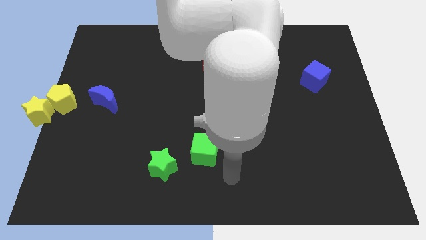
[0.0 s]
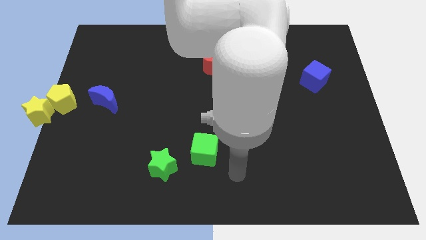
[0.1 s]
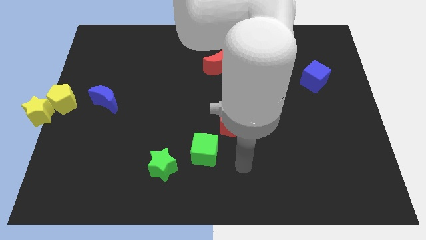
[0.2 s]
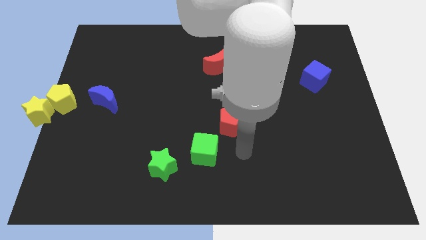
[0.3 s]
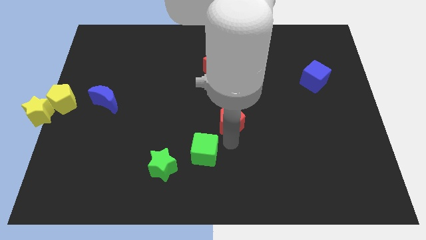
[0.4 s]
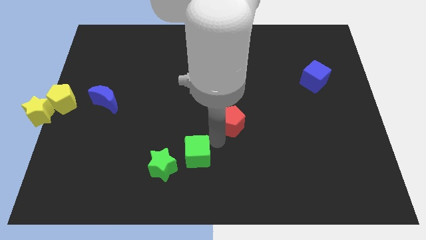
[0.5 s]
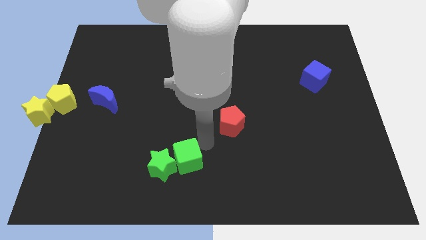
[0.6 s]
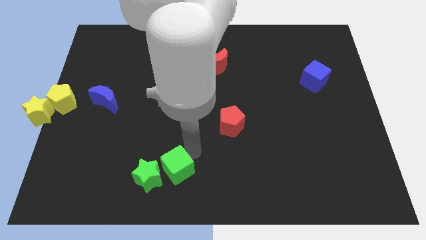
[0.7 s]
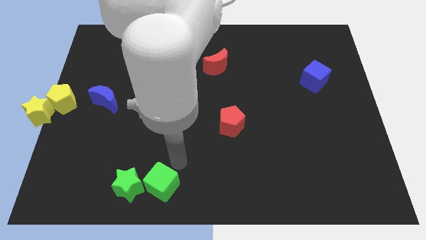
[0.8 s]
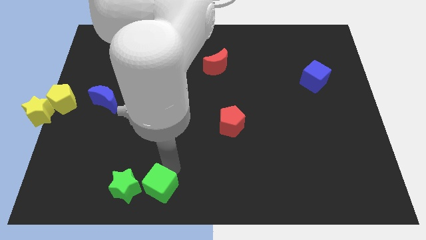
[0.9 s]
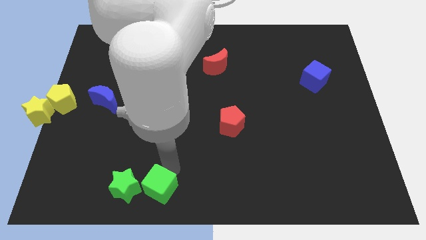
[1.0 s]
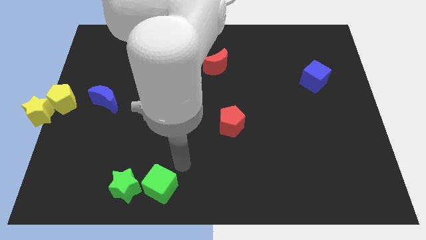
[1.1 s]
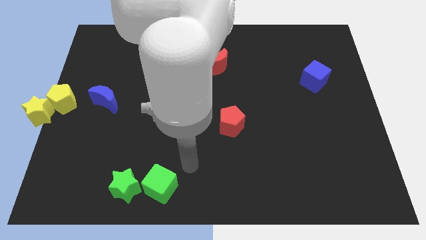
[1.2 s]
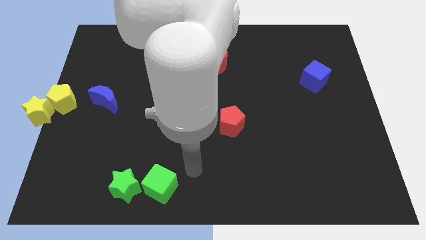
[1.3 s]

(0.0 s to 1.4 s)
push the green cube right to the green star

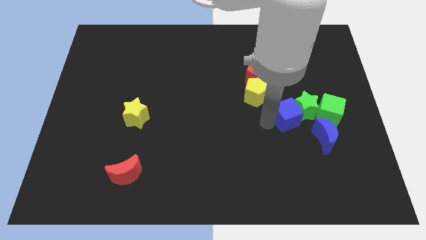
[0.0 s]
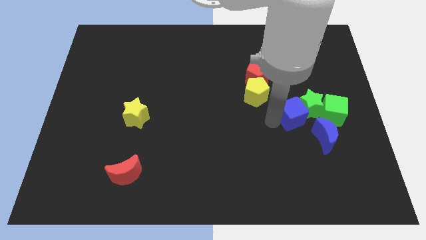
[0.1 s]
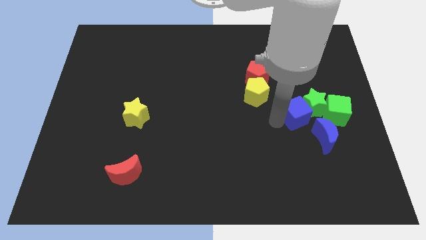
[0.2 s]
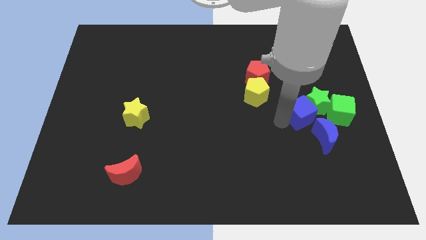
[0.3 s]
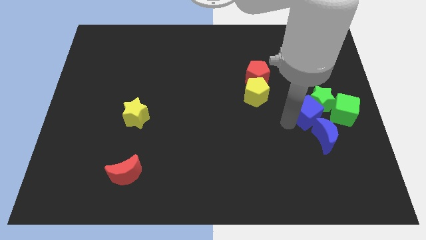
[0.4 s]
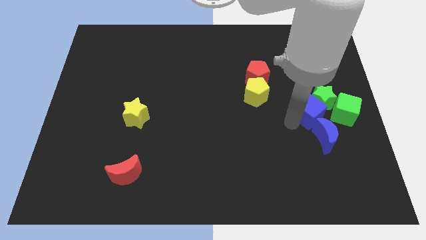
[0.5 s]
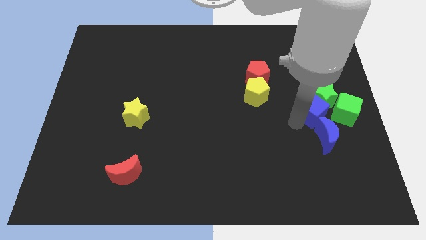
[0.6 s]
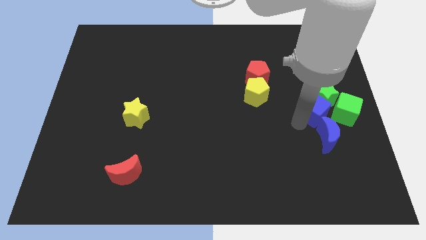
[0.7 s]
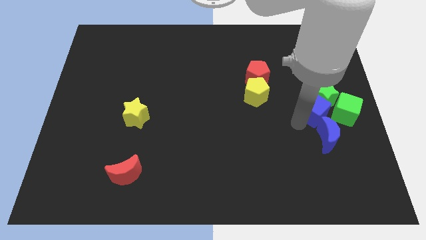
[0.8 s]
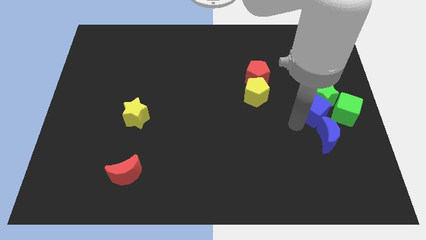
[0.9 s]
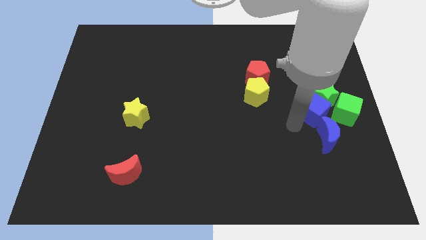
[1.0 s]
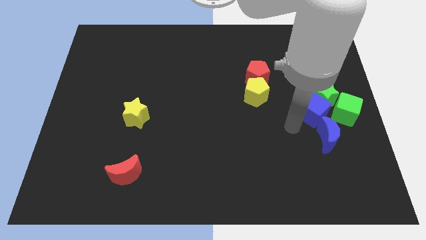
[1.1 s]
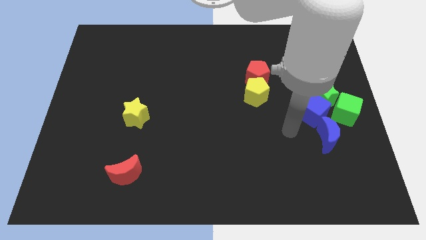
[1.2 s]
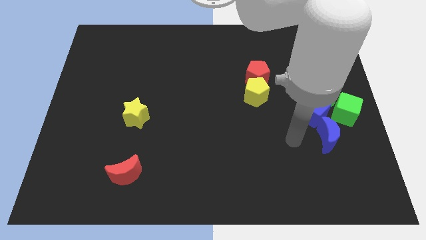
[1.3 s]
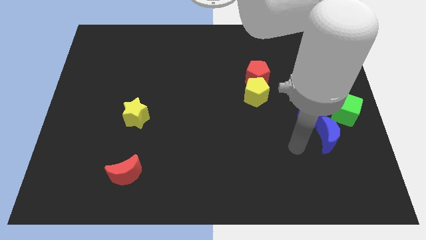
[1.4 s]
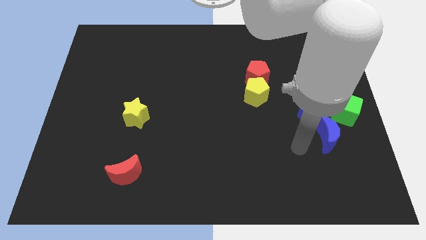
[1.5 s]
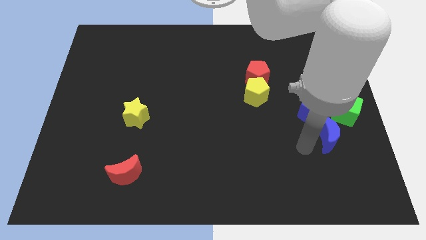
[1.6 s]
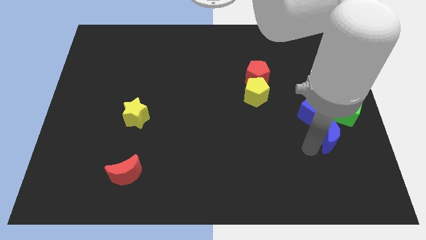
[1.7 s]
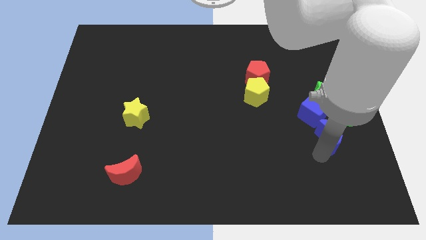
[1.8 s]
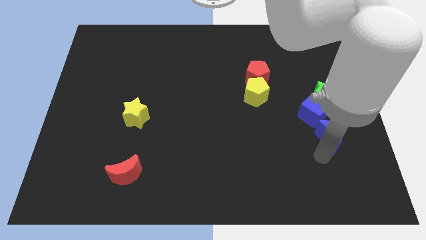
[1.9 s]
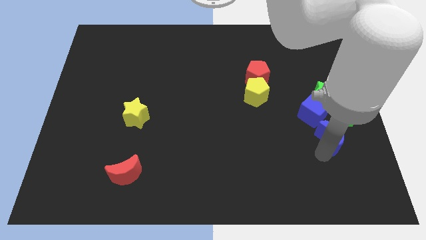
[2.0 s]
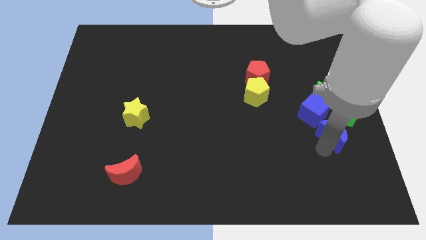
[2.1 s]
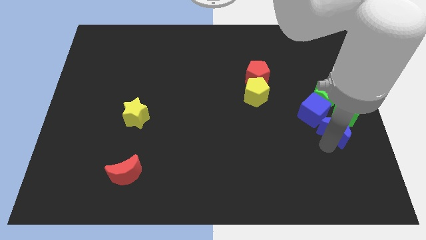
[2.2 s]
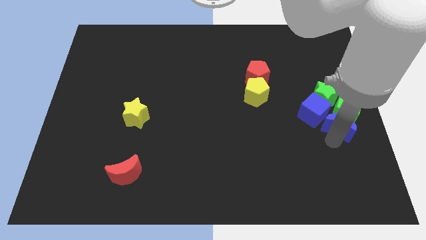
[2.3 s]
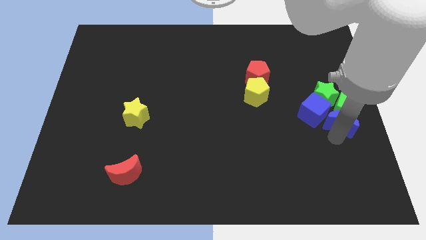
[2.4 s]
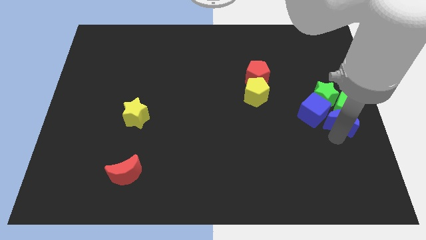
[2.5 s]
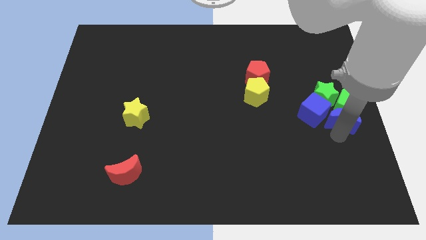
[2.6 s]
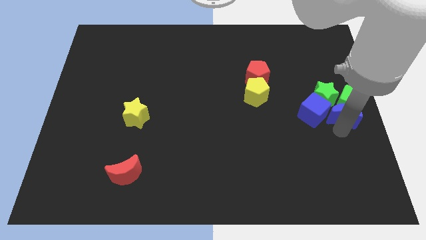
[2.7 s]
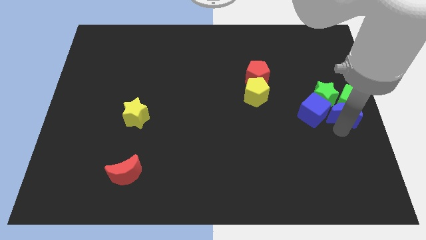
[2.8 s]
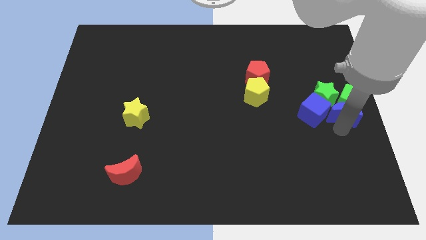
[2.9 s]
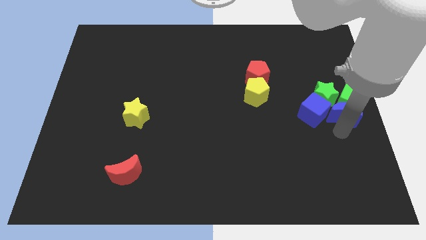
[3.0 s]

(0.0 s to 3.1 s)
make a group of green and the blue blocks at the centre right side

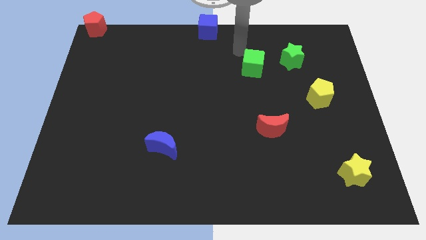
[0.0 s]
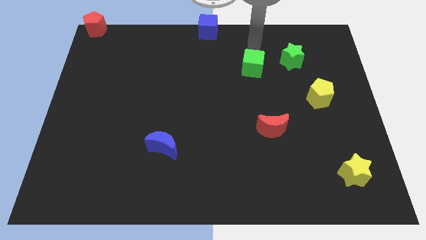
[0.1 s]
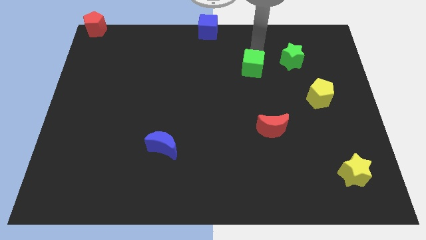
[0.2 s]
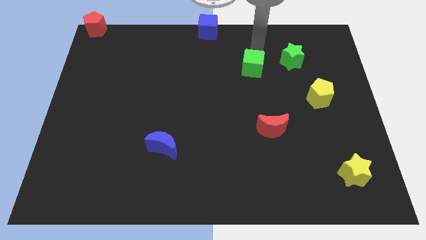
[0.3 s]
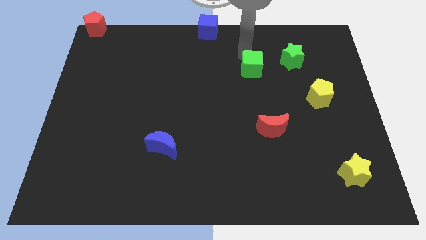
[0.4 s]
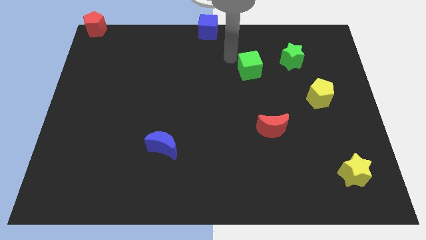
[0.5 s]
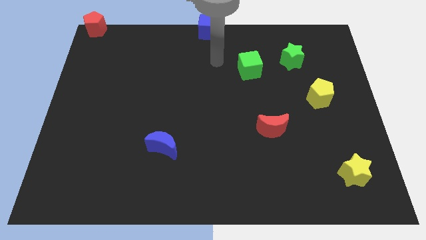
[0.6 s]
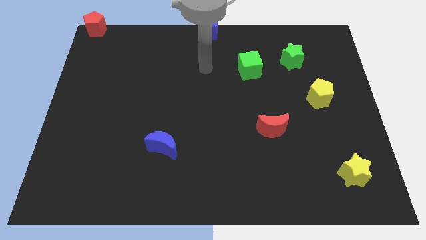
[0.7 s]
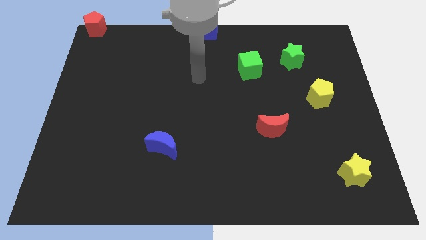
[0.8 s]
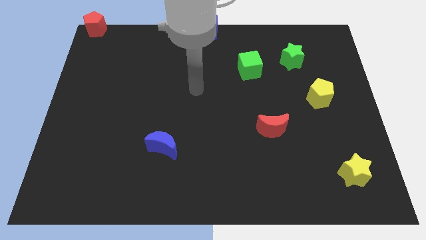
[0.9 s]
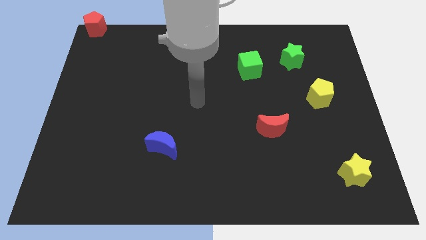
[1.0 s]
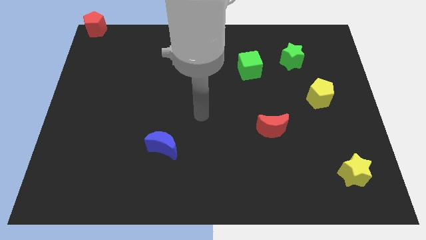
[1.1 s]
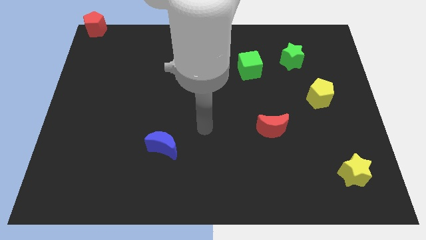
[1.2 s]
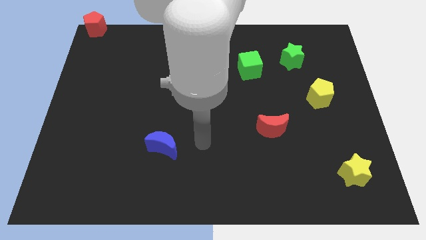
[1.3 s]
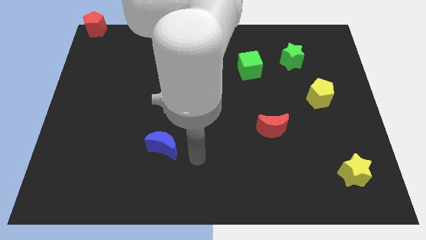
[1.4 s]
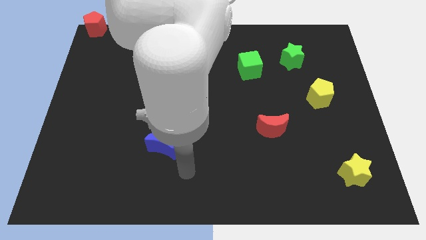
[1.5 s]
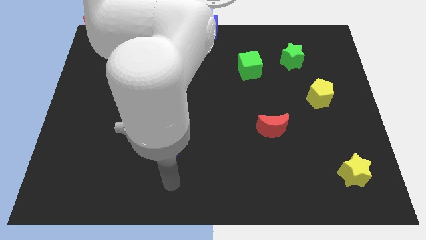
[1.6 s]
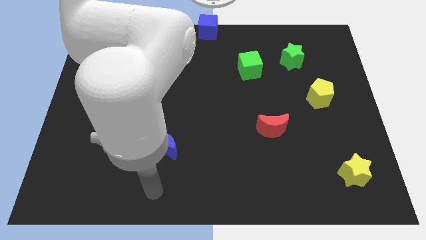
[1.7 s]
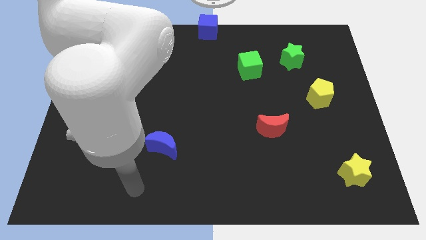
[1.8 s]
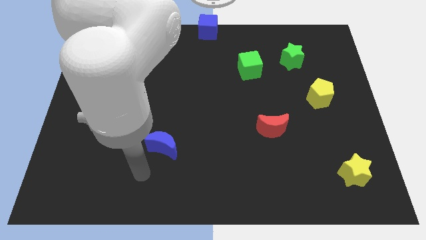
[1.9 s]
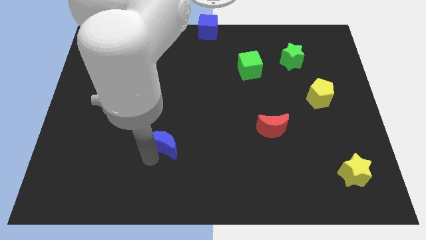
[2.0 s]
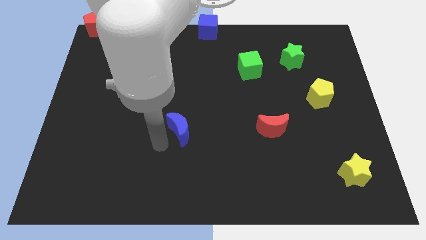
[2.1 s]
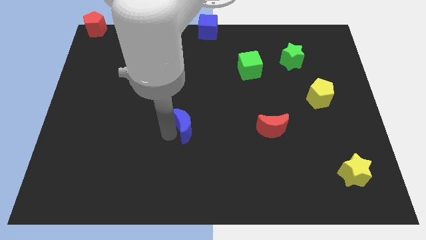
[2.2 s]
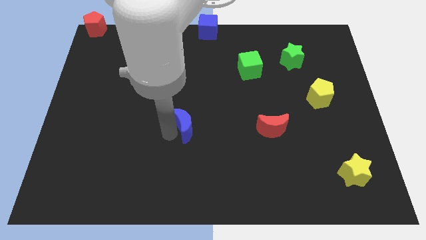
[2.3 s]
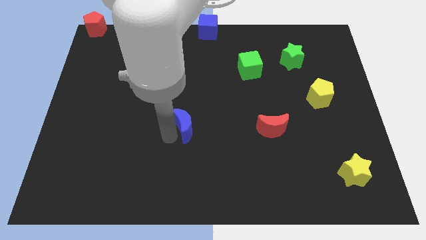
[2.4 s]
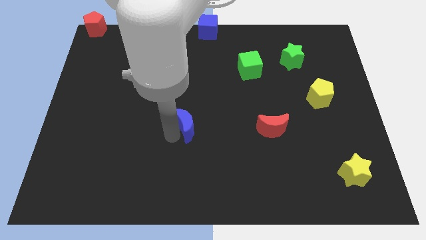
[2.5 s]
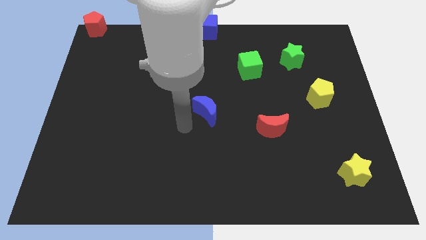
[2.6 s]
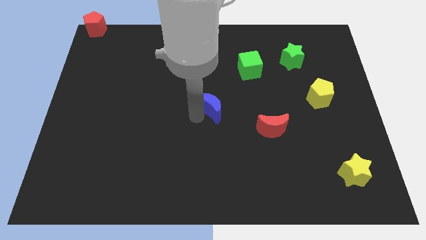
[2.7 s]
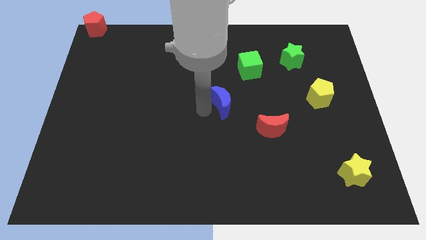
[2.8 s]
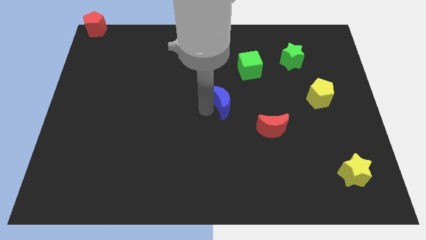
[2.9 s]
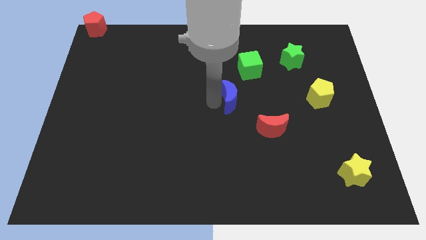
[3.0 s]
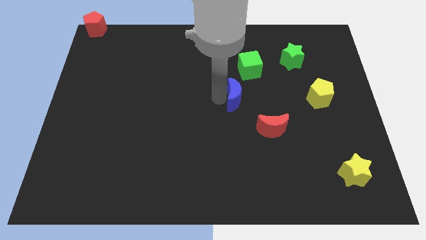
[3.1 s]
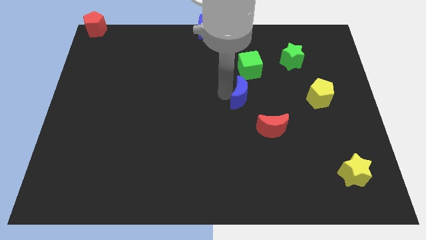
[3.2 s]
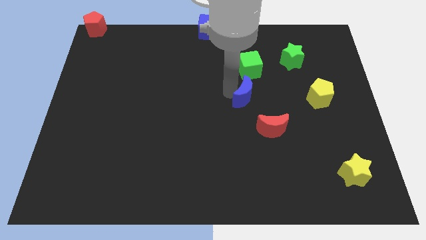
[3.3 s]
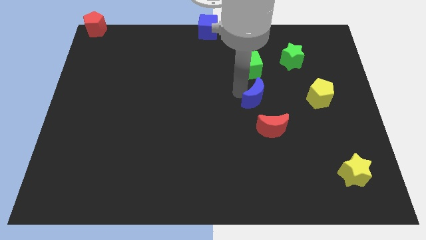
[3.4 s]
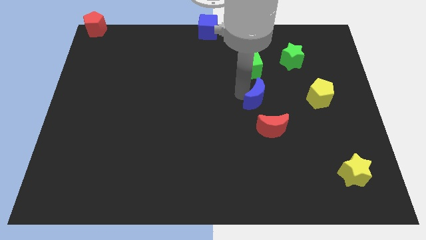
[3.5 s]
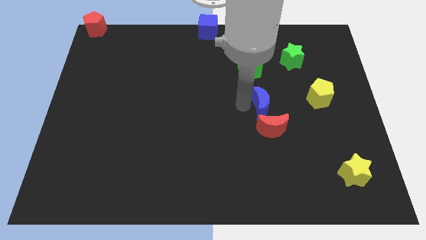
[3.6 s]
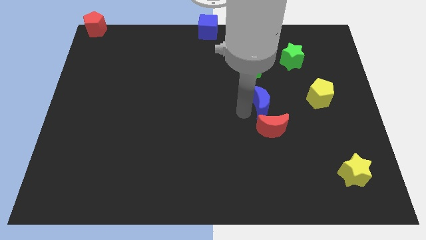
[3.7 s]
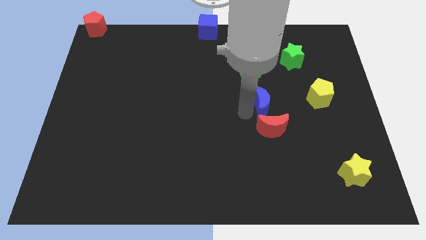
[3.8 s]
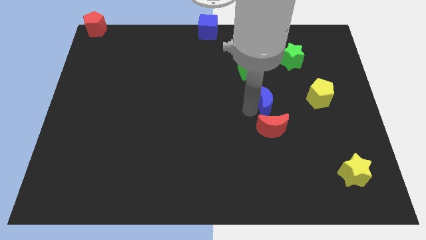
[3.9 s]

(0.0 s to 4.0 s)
place the blue crescent in between the red crescent and the green cube

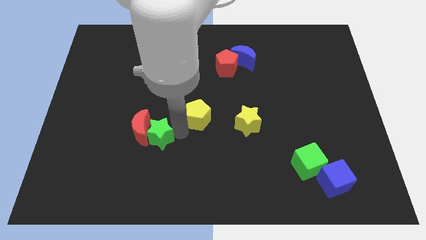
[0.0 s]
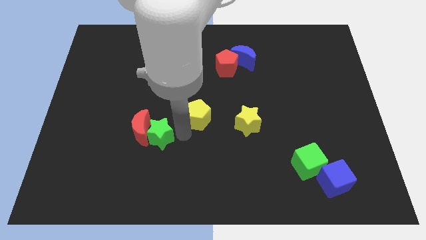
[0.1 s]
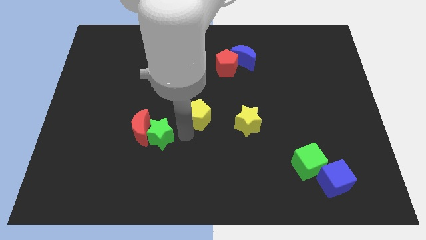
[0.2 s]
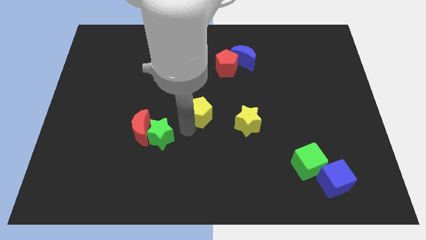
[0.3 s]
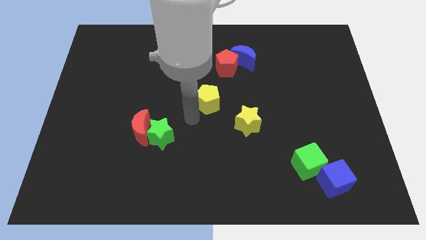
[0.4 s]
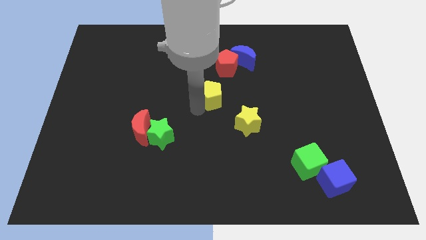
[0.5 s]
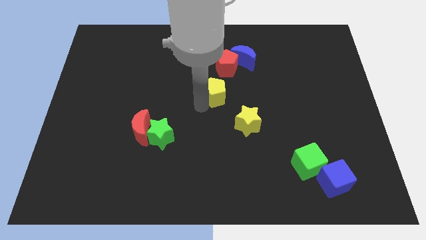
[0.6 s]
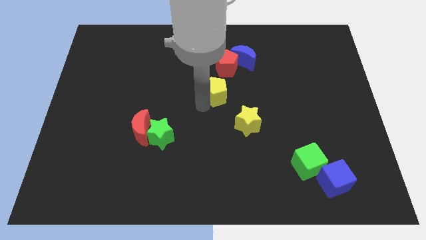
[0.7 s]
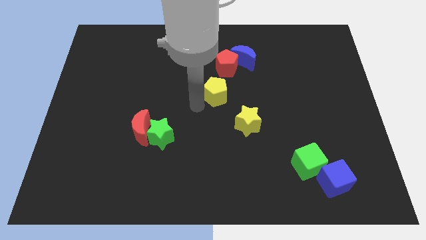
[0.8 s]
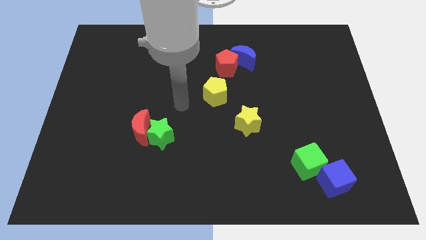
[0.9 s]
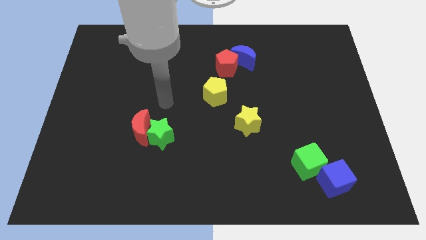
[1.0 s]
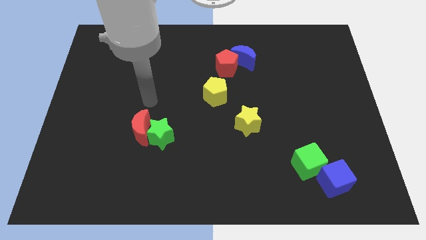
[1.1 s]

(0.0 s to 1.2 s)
place yellow pentagon below red pentagon
